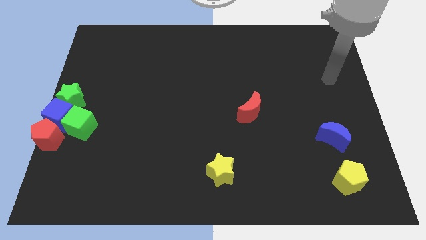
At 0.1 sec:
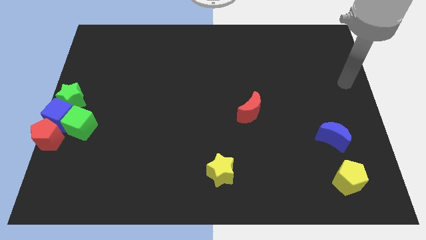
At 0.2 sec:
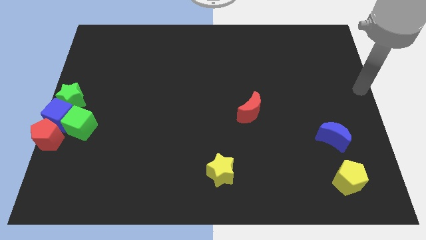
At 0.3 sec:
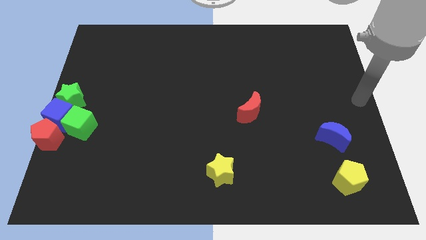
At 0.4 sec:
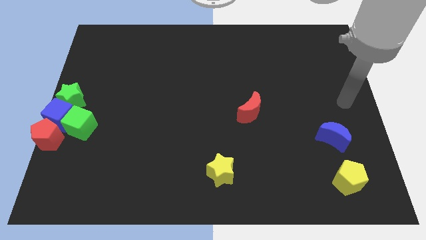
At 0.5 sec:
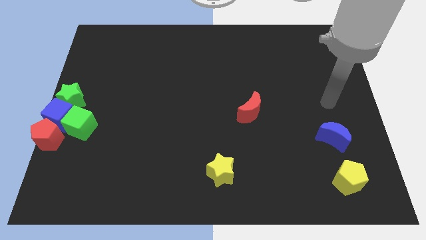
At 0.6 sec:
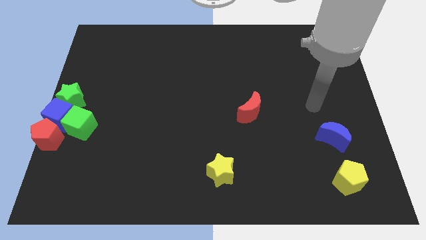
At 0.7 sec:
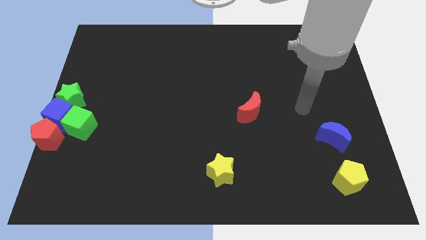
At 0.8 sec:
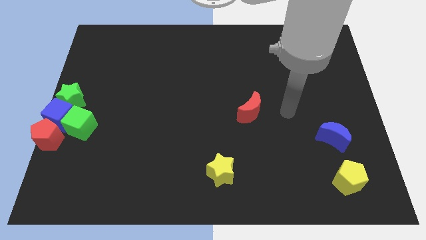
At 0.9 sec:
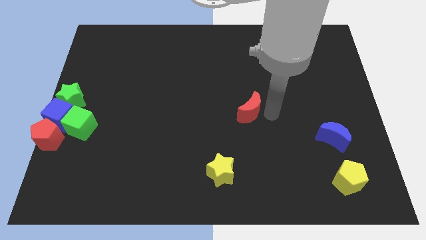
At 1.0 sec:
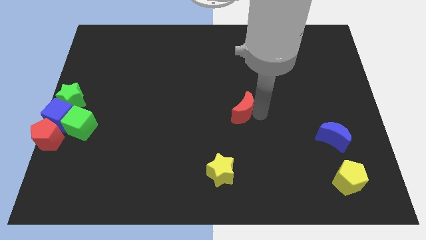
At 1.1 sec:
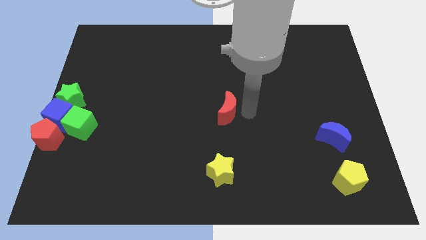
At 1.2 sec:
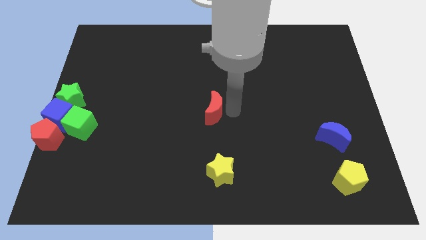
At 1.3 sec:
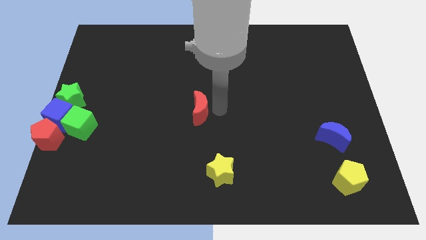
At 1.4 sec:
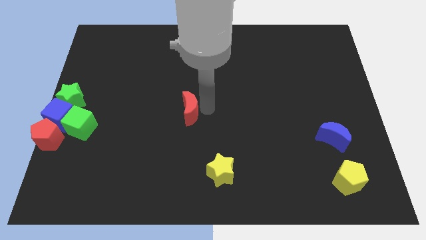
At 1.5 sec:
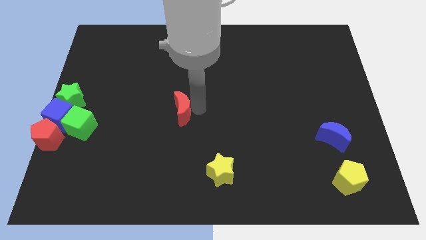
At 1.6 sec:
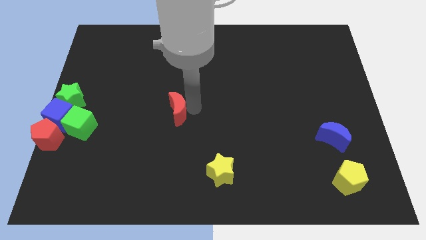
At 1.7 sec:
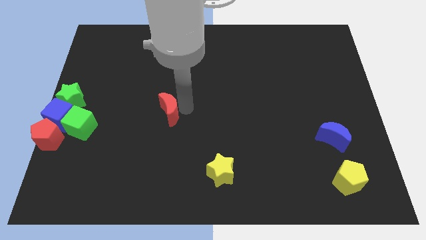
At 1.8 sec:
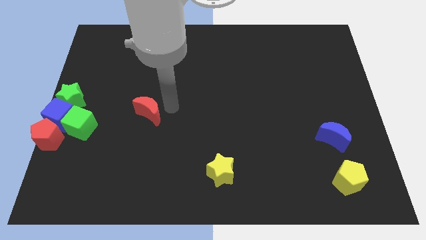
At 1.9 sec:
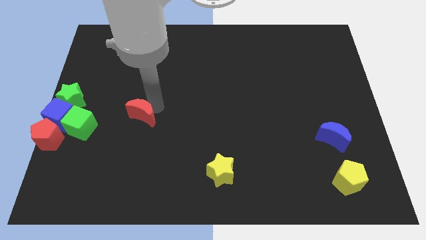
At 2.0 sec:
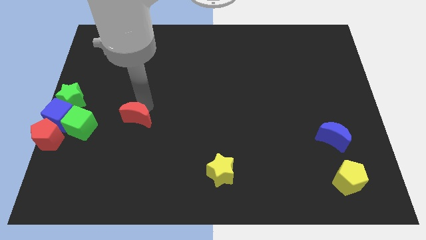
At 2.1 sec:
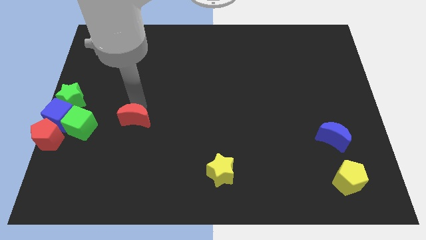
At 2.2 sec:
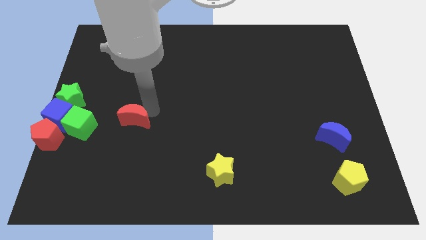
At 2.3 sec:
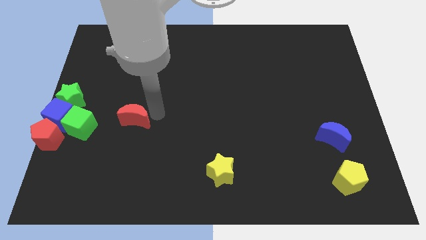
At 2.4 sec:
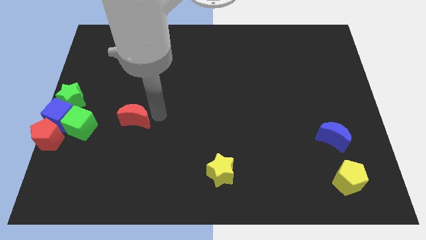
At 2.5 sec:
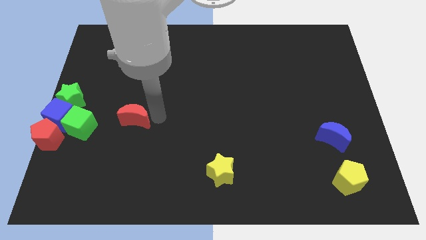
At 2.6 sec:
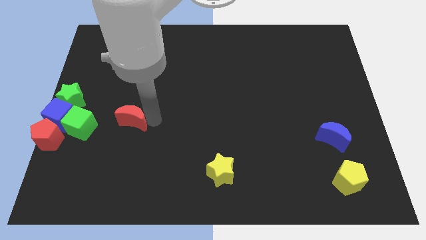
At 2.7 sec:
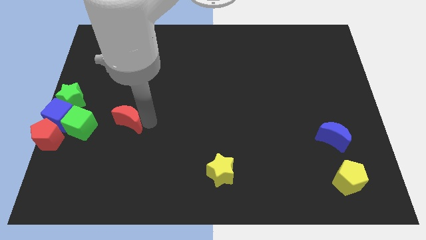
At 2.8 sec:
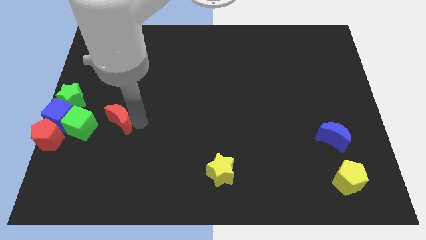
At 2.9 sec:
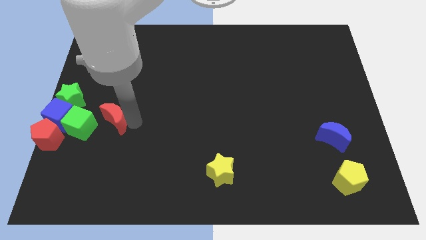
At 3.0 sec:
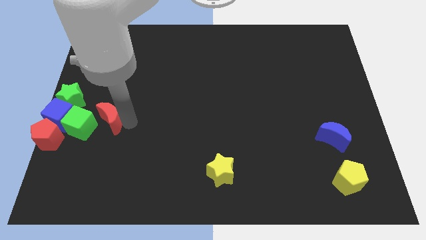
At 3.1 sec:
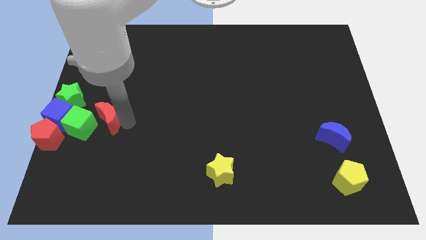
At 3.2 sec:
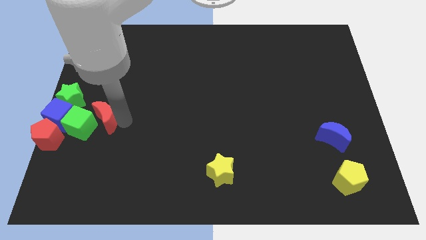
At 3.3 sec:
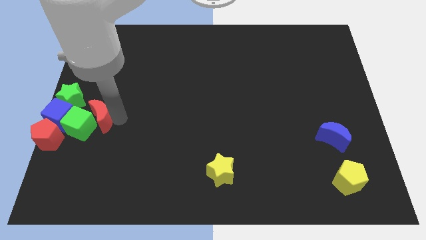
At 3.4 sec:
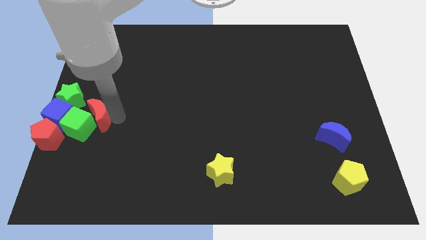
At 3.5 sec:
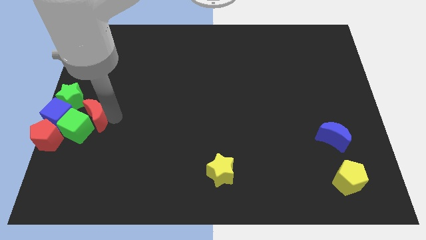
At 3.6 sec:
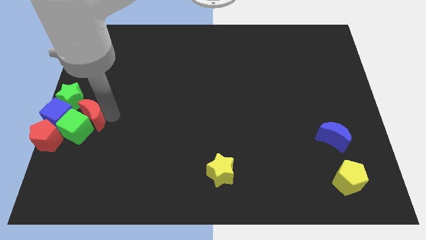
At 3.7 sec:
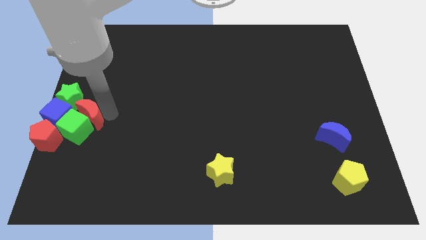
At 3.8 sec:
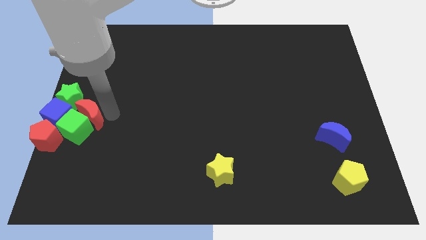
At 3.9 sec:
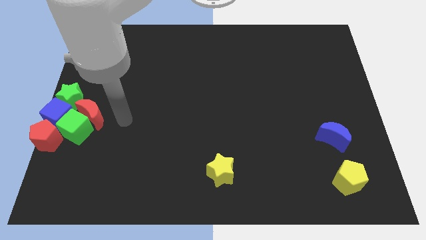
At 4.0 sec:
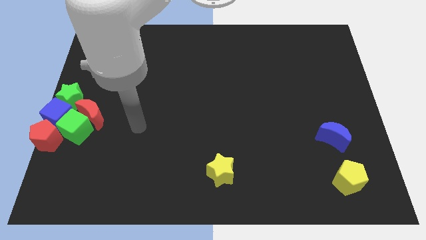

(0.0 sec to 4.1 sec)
place red moon to the top of green cube

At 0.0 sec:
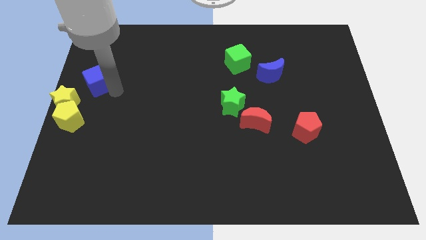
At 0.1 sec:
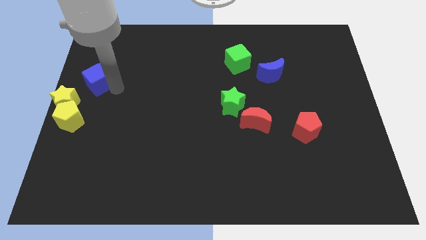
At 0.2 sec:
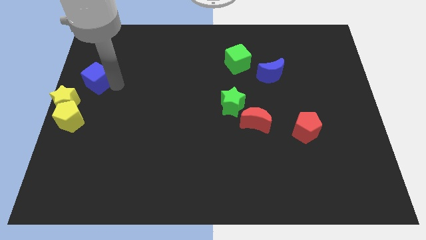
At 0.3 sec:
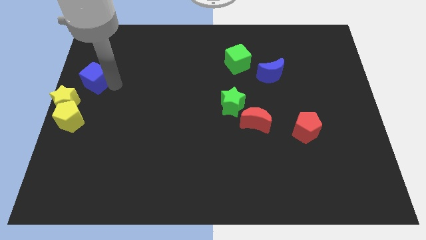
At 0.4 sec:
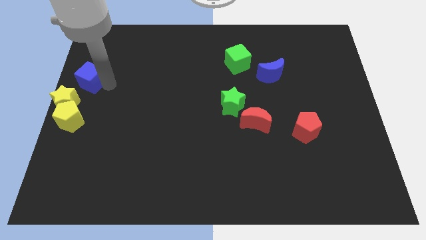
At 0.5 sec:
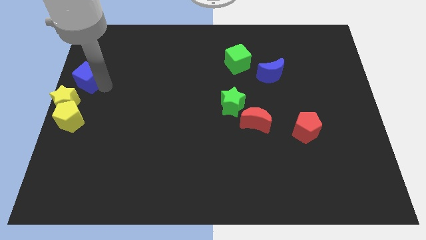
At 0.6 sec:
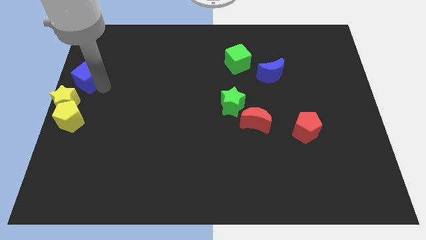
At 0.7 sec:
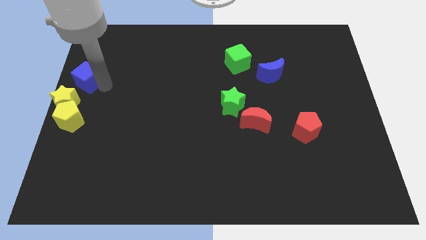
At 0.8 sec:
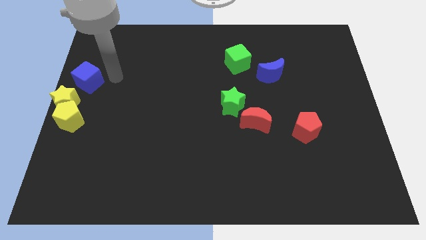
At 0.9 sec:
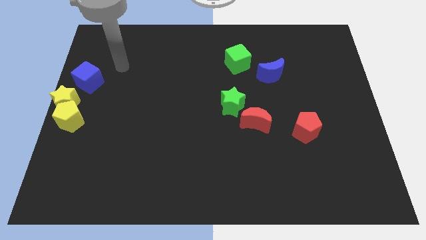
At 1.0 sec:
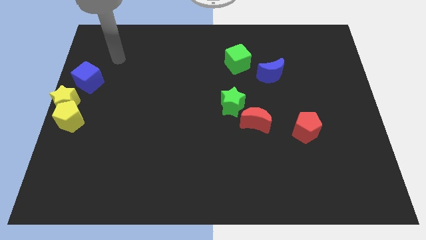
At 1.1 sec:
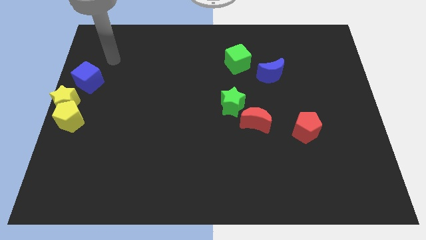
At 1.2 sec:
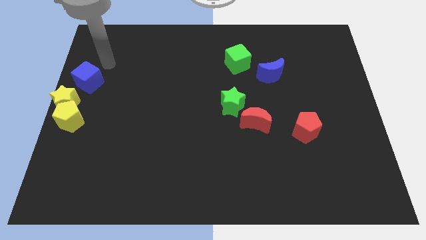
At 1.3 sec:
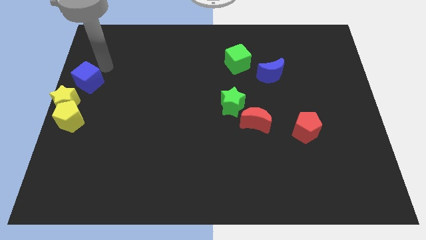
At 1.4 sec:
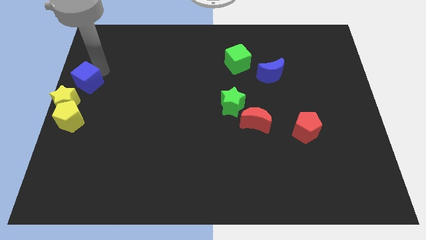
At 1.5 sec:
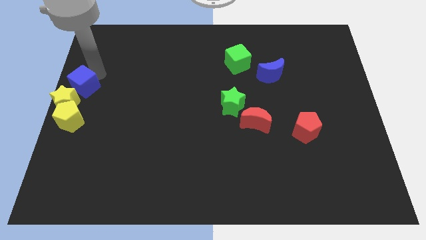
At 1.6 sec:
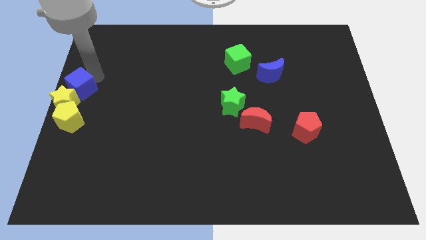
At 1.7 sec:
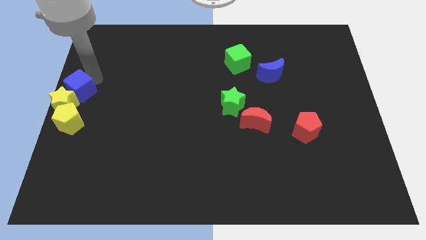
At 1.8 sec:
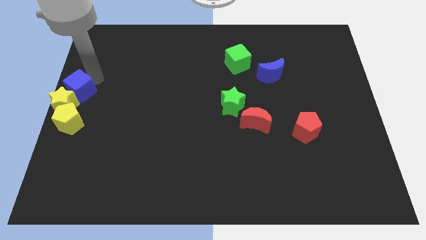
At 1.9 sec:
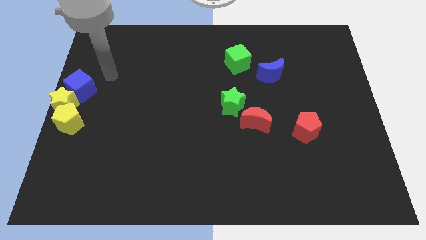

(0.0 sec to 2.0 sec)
push the blue cube into the top side of the yellow star

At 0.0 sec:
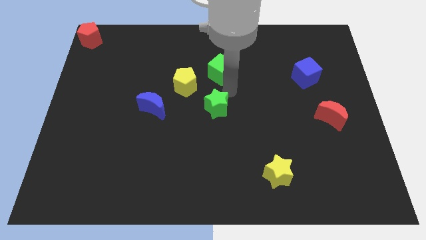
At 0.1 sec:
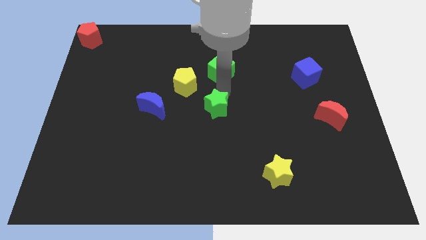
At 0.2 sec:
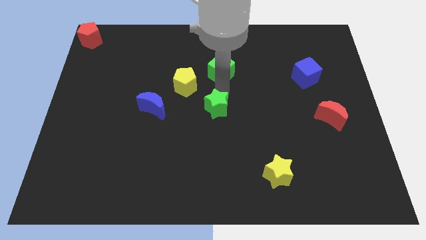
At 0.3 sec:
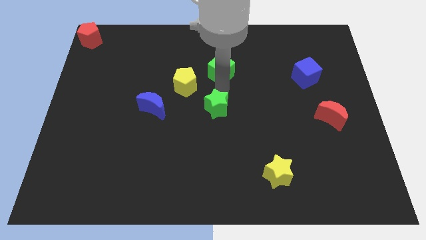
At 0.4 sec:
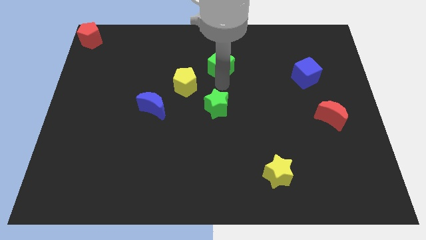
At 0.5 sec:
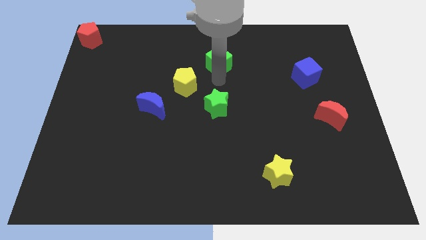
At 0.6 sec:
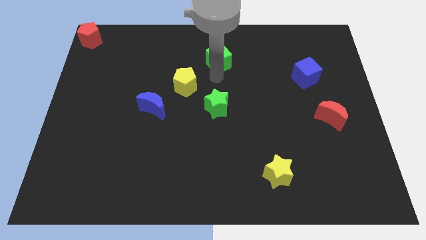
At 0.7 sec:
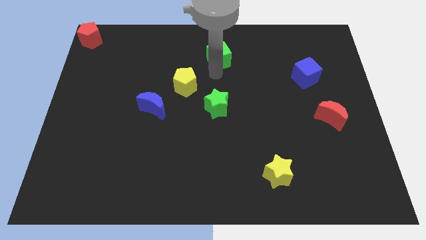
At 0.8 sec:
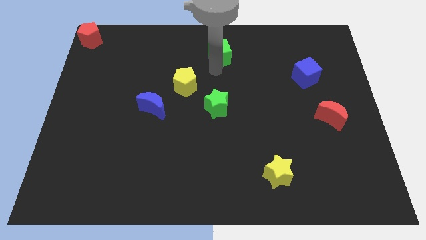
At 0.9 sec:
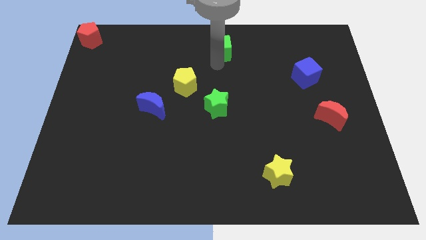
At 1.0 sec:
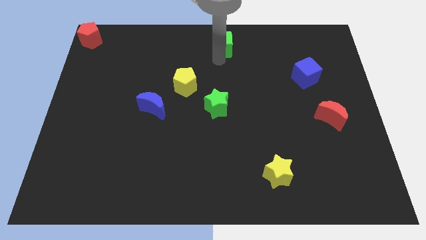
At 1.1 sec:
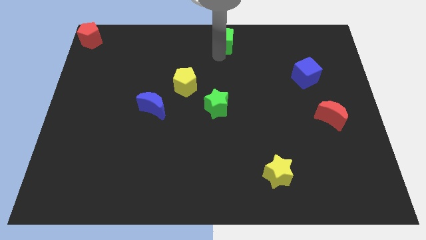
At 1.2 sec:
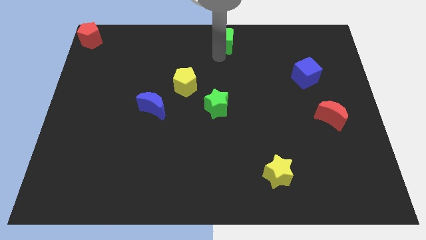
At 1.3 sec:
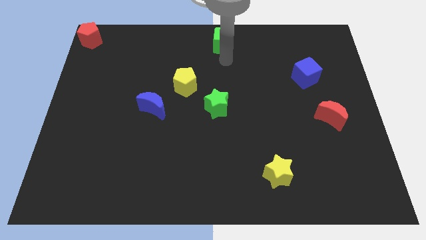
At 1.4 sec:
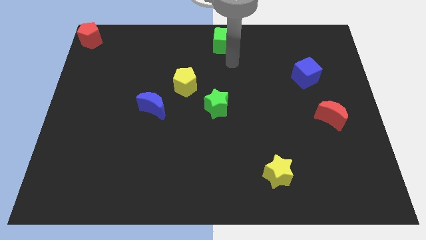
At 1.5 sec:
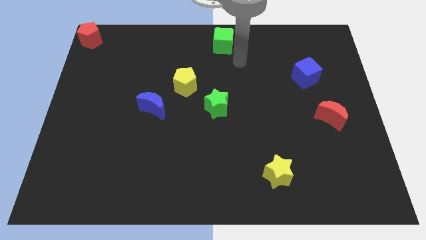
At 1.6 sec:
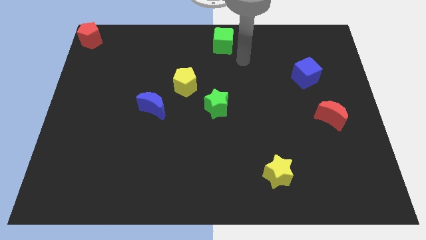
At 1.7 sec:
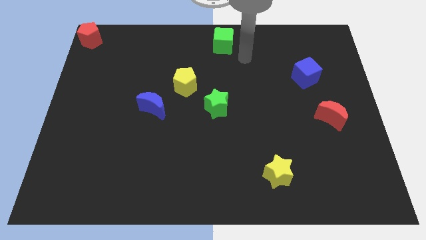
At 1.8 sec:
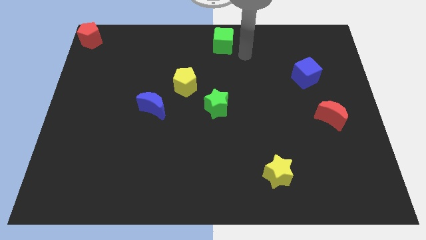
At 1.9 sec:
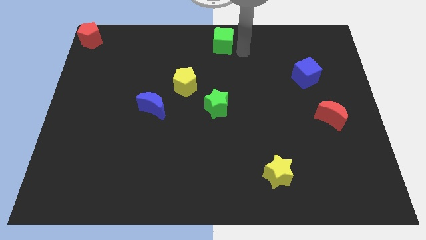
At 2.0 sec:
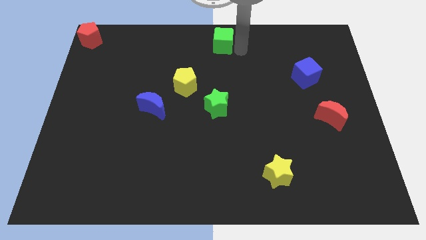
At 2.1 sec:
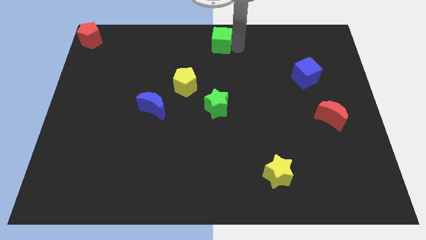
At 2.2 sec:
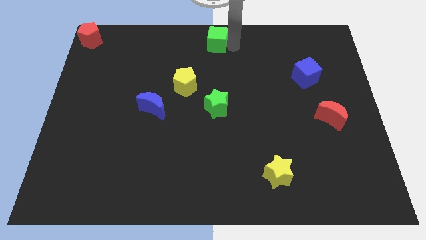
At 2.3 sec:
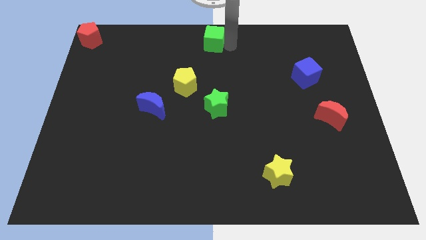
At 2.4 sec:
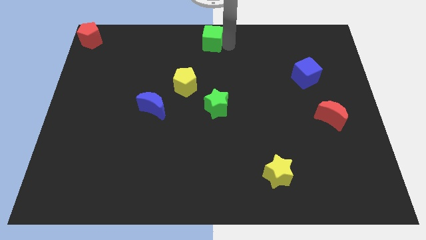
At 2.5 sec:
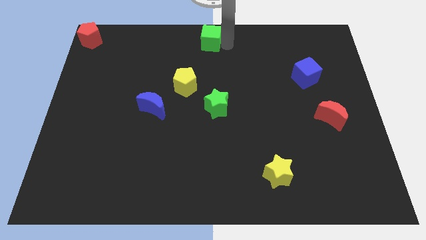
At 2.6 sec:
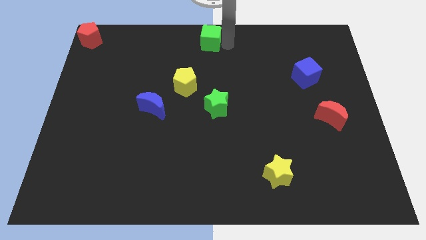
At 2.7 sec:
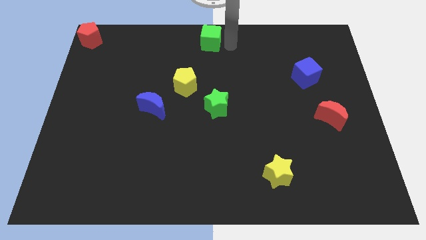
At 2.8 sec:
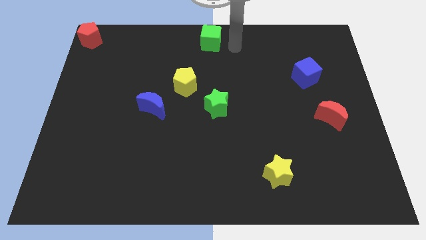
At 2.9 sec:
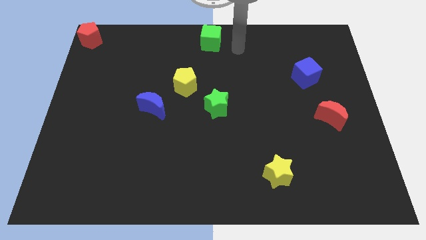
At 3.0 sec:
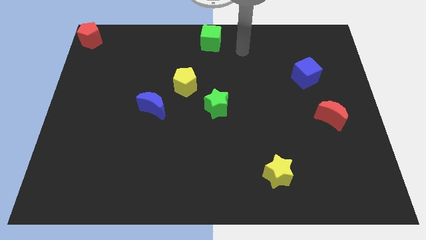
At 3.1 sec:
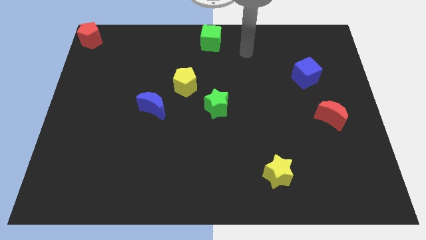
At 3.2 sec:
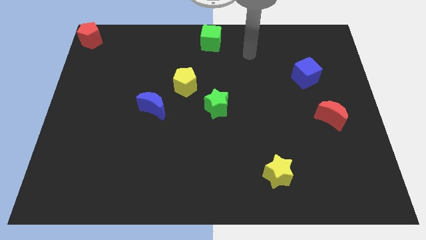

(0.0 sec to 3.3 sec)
slide the green cube to the top center of the board
